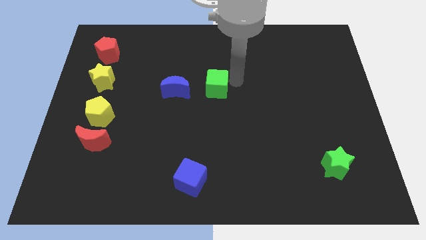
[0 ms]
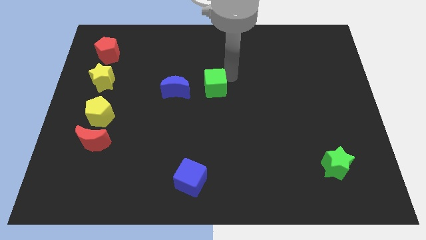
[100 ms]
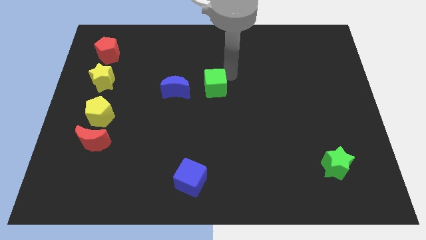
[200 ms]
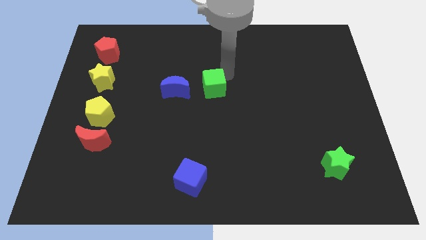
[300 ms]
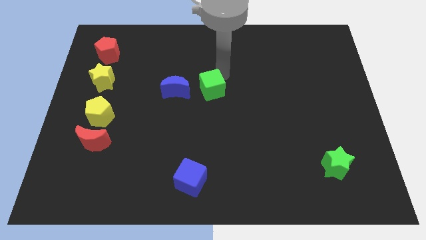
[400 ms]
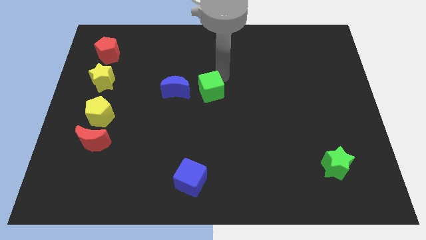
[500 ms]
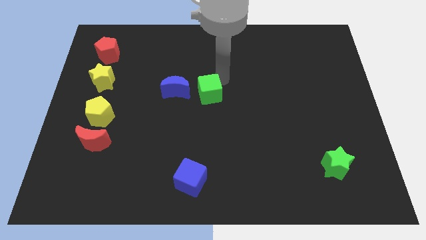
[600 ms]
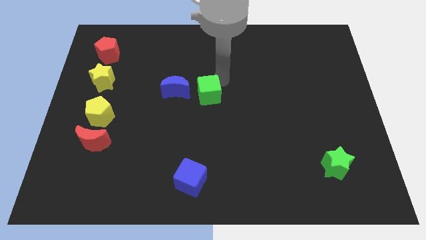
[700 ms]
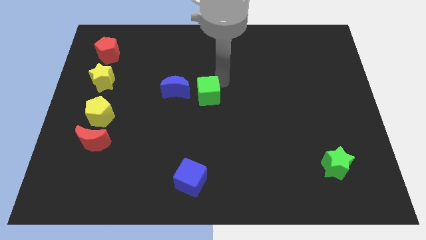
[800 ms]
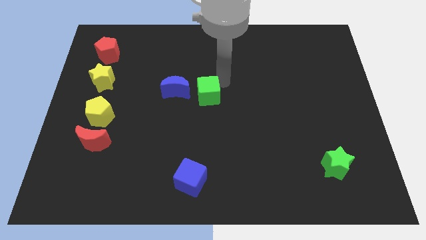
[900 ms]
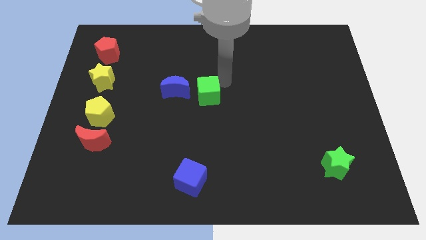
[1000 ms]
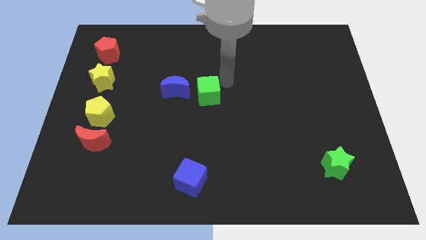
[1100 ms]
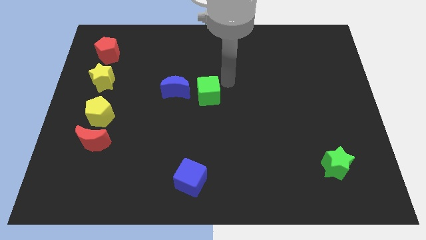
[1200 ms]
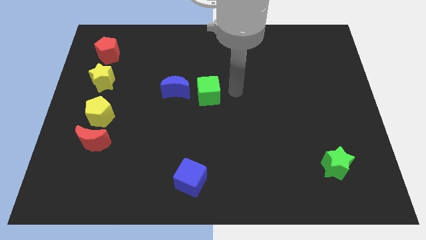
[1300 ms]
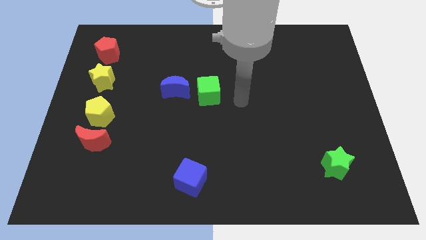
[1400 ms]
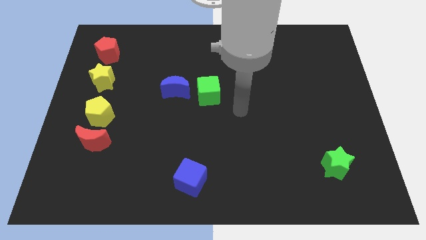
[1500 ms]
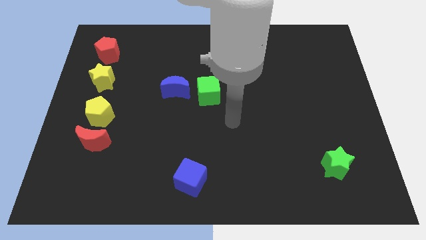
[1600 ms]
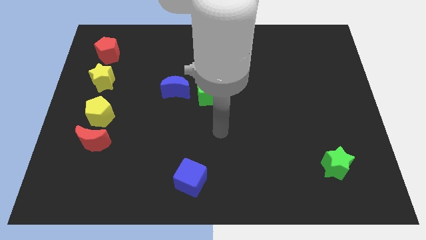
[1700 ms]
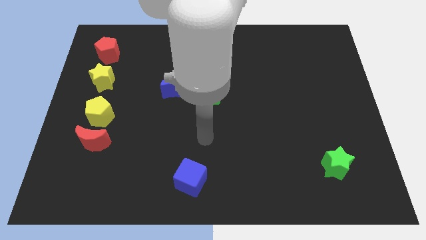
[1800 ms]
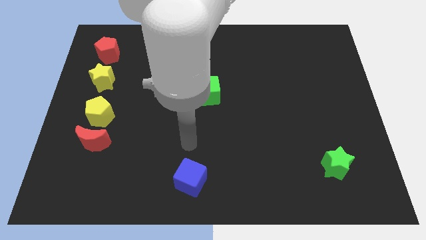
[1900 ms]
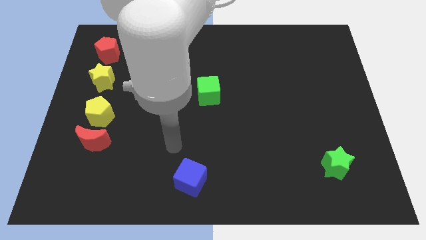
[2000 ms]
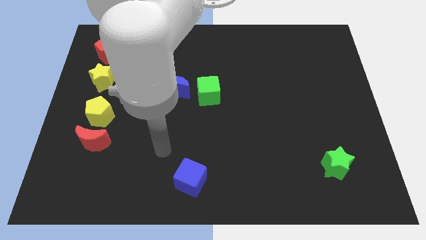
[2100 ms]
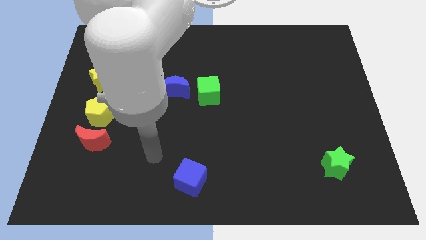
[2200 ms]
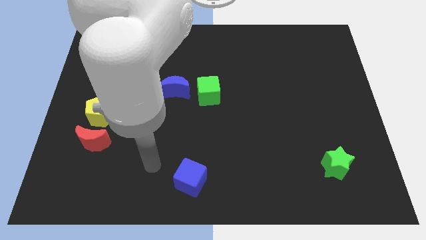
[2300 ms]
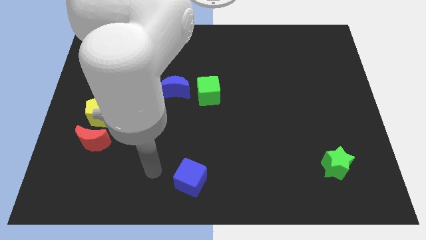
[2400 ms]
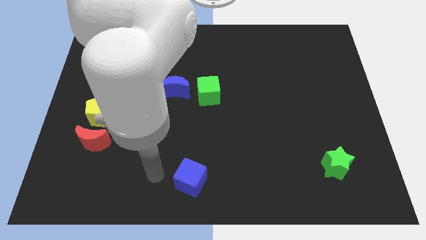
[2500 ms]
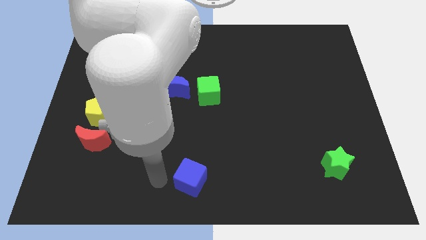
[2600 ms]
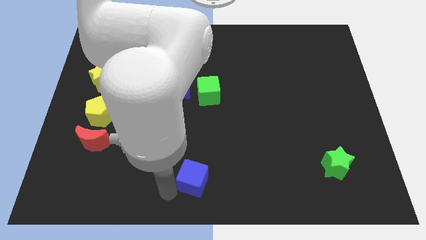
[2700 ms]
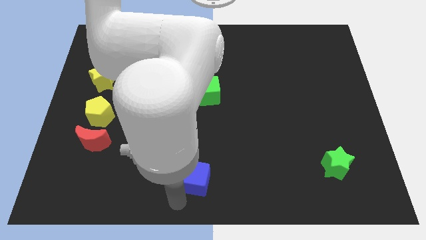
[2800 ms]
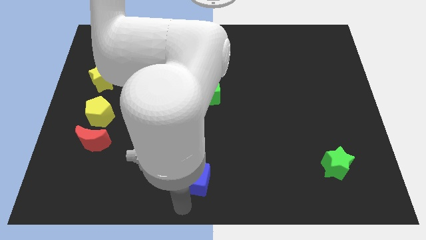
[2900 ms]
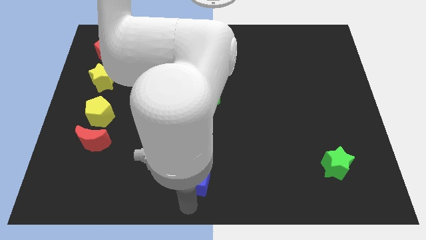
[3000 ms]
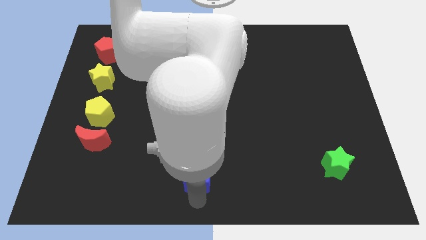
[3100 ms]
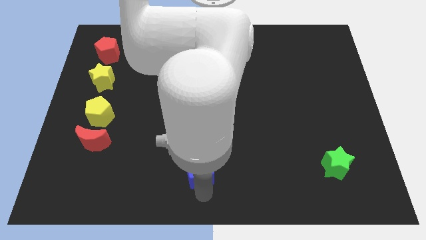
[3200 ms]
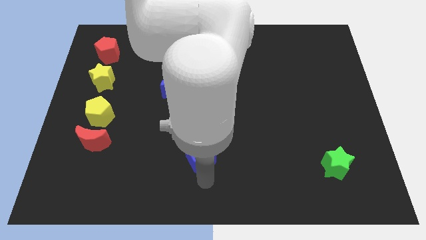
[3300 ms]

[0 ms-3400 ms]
move your arm to the bottom center of the blue cube

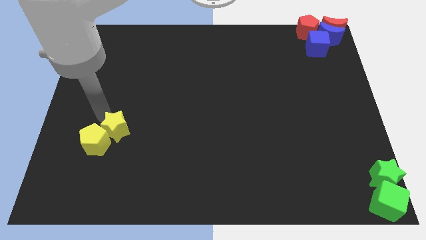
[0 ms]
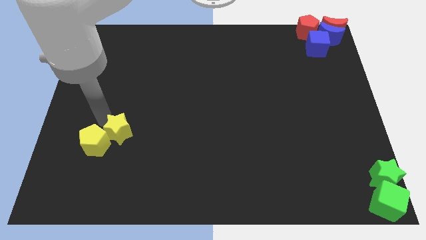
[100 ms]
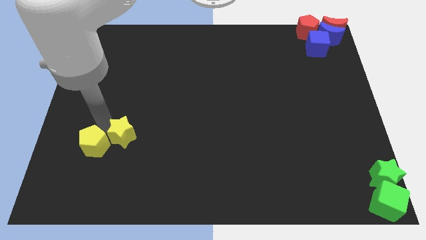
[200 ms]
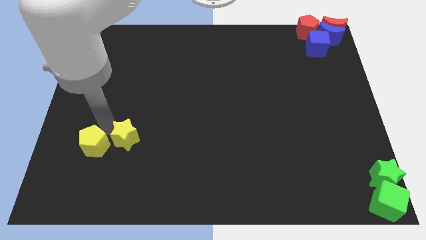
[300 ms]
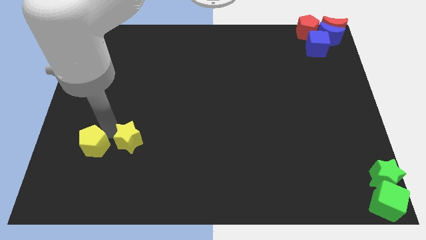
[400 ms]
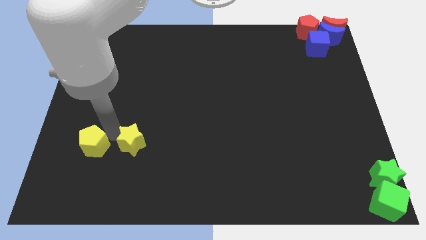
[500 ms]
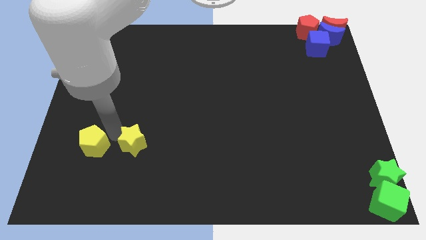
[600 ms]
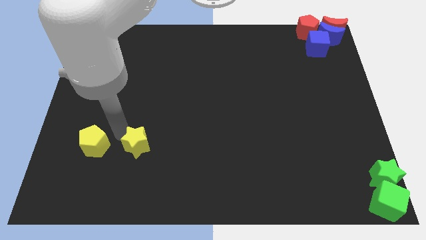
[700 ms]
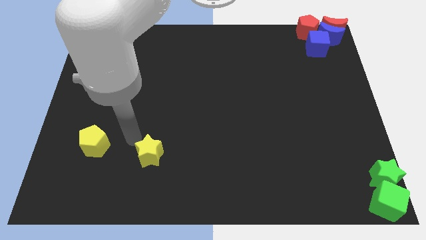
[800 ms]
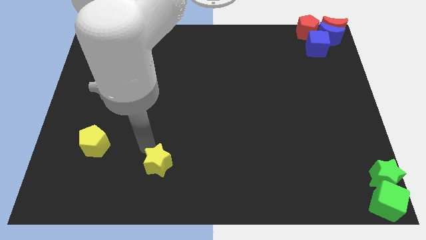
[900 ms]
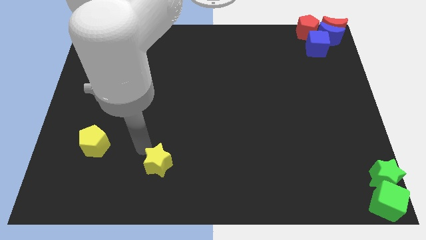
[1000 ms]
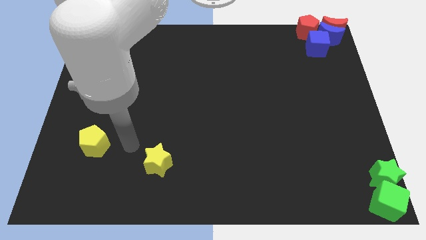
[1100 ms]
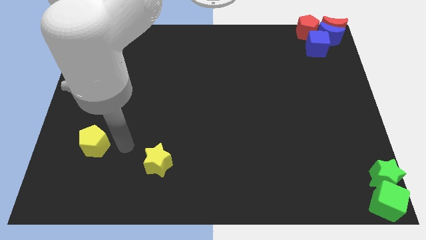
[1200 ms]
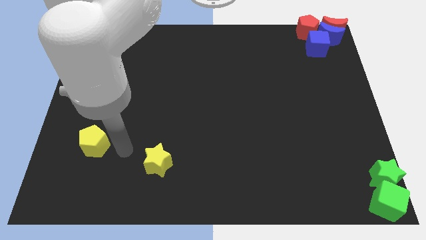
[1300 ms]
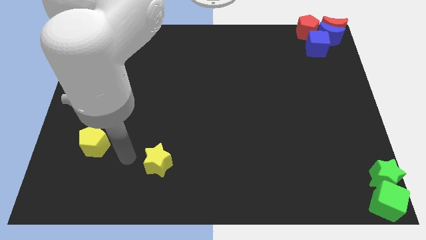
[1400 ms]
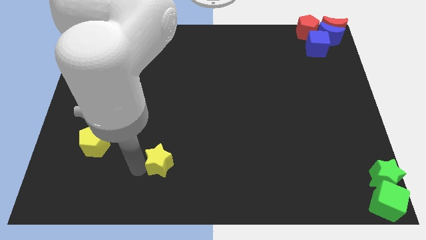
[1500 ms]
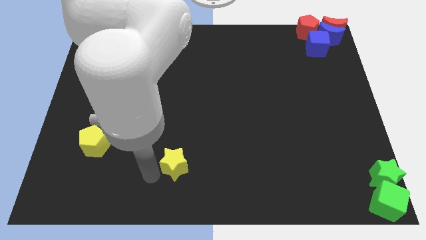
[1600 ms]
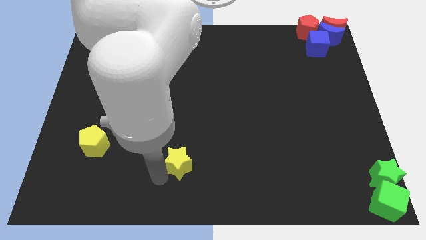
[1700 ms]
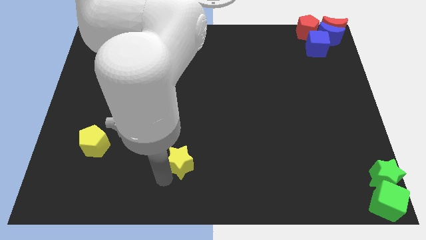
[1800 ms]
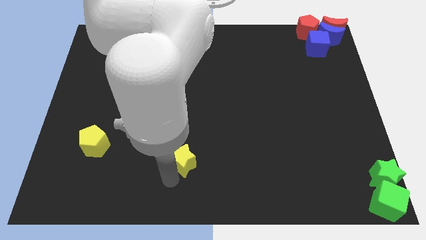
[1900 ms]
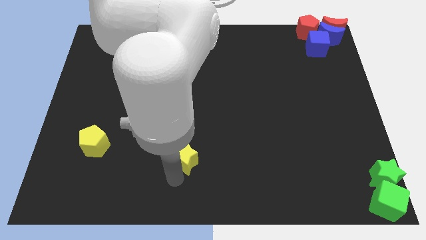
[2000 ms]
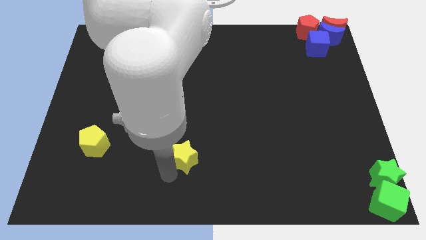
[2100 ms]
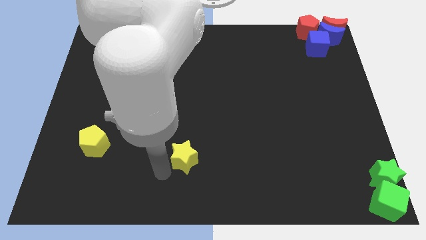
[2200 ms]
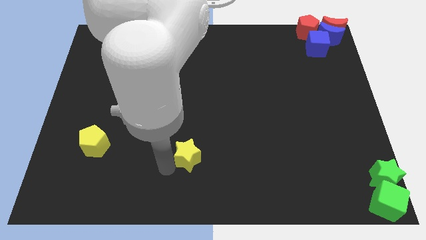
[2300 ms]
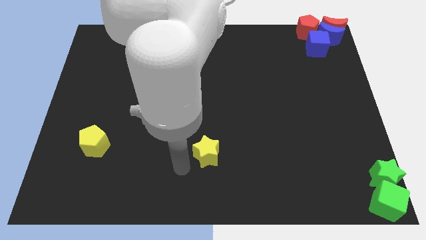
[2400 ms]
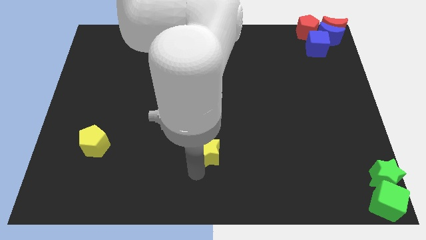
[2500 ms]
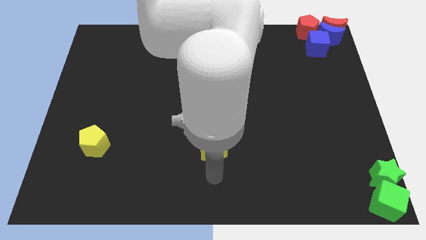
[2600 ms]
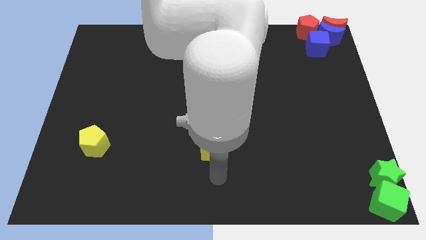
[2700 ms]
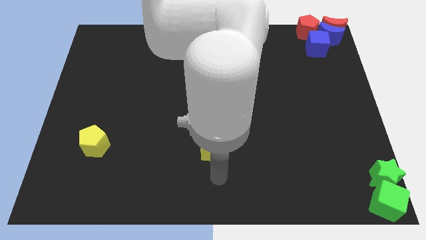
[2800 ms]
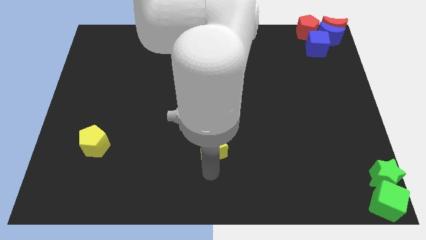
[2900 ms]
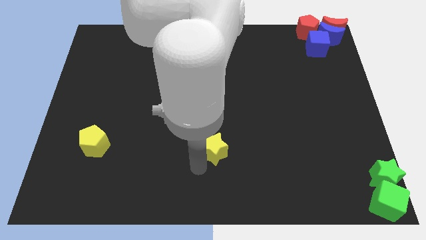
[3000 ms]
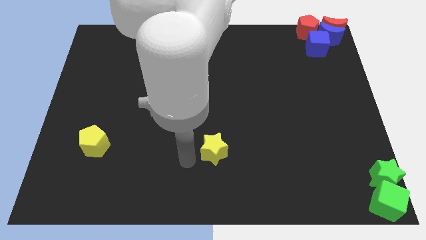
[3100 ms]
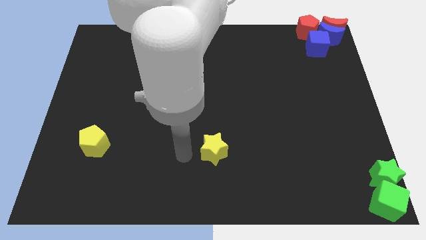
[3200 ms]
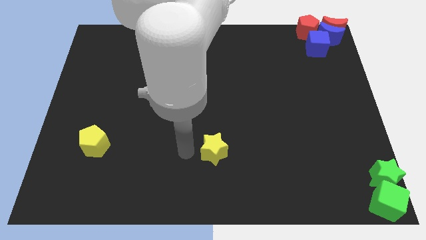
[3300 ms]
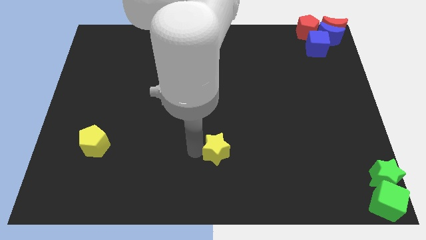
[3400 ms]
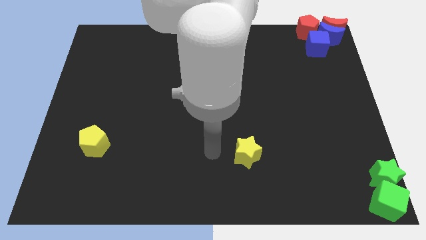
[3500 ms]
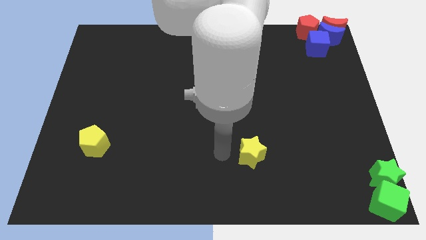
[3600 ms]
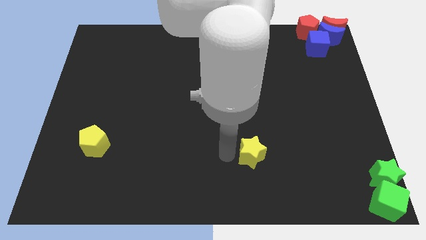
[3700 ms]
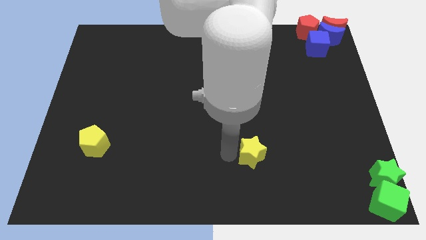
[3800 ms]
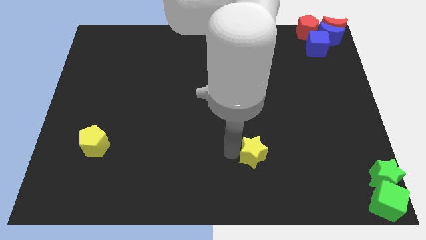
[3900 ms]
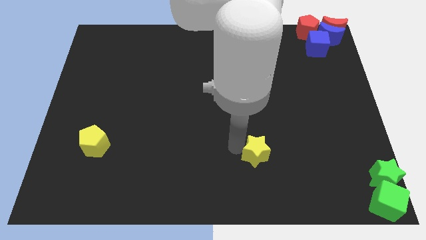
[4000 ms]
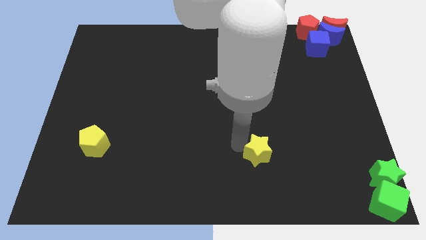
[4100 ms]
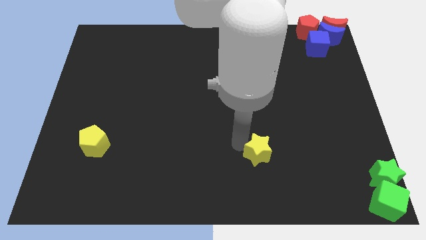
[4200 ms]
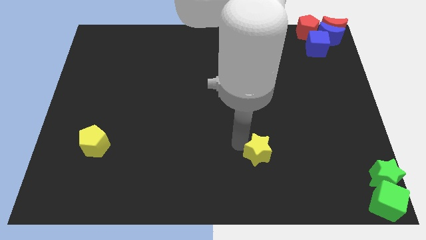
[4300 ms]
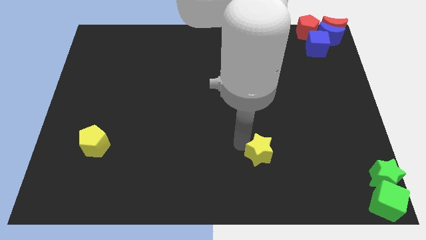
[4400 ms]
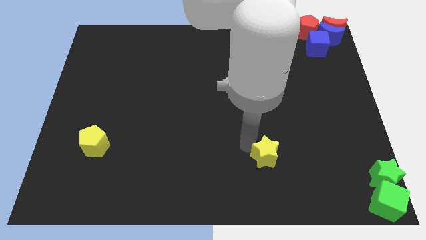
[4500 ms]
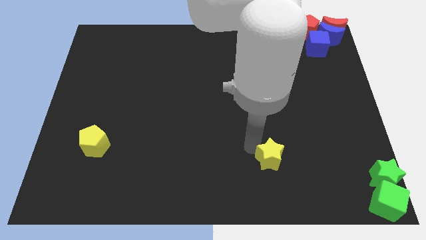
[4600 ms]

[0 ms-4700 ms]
push the yellow star towards right

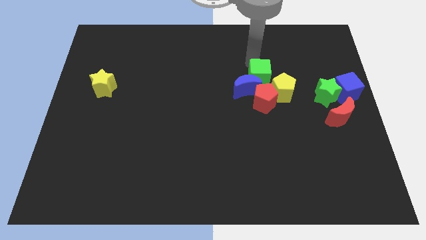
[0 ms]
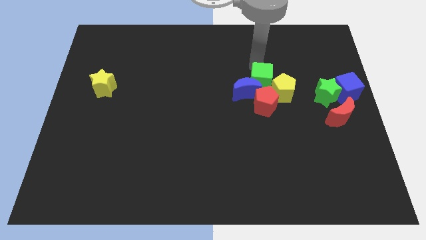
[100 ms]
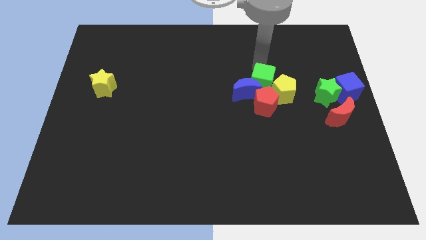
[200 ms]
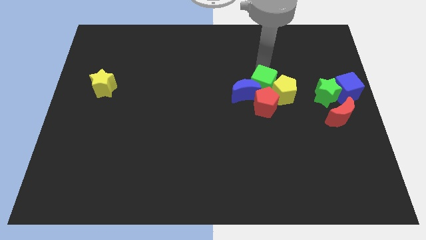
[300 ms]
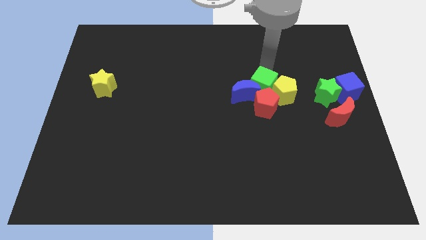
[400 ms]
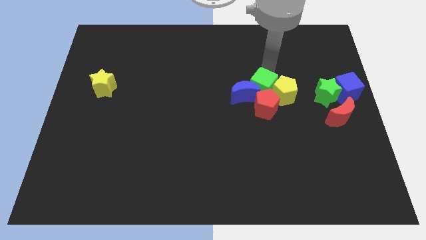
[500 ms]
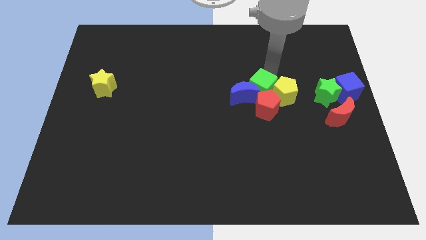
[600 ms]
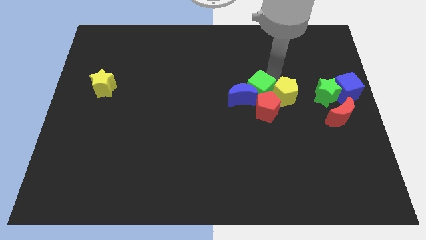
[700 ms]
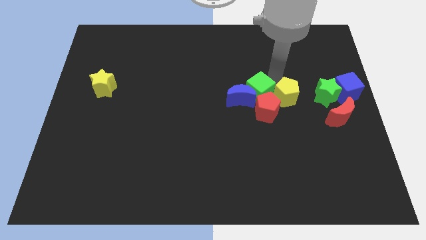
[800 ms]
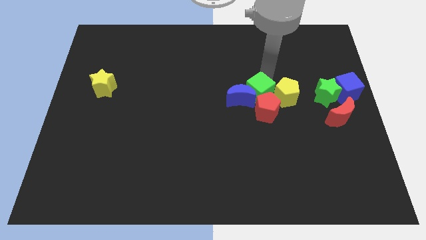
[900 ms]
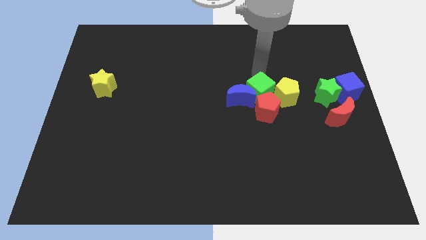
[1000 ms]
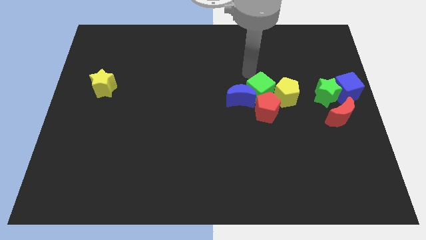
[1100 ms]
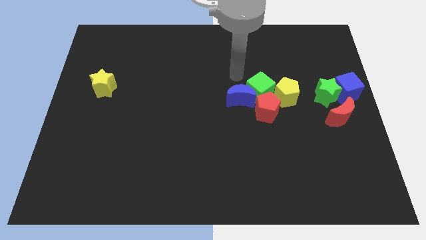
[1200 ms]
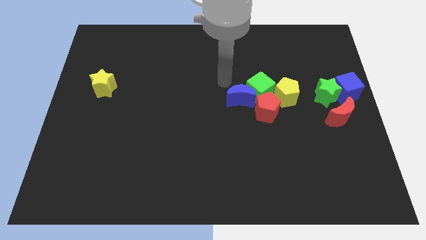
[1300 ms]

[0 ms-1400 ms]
place the green cube above the red pentagon
